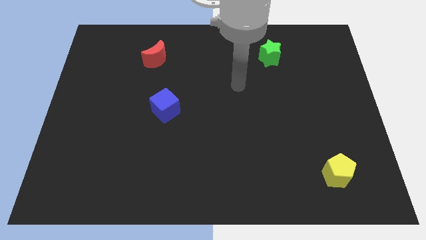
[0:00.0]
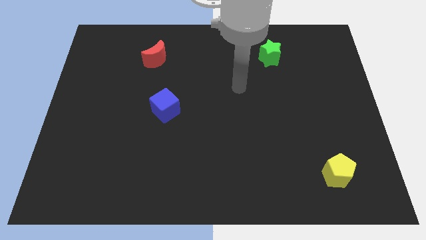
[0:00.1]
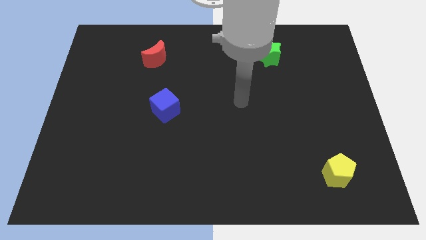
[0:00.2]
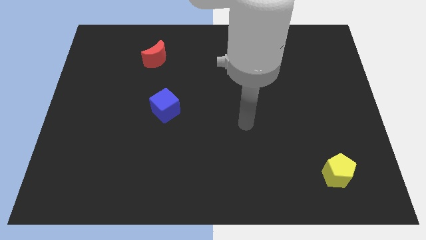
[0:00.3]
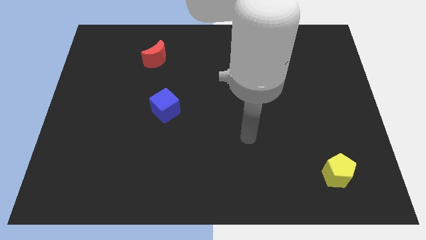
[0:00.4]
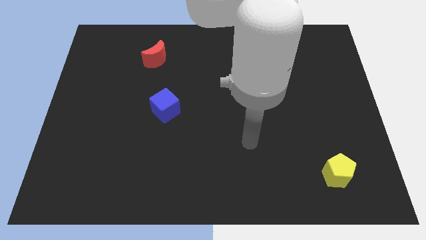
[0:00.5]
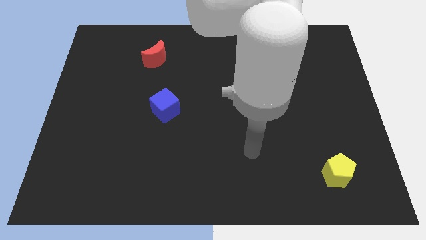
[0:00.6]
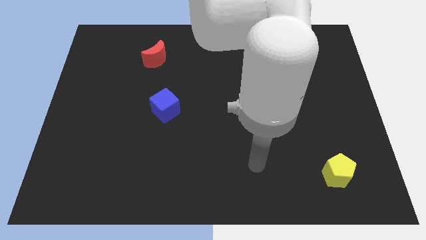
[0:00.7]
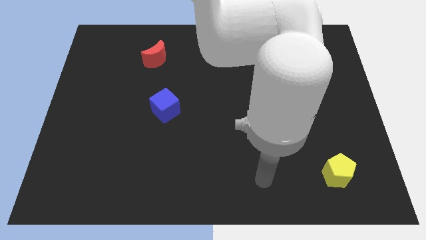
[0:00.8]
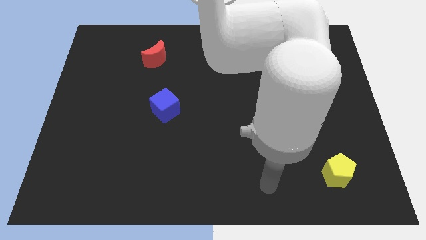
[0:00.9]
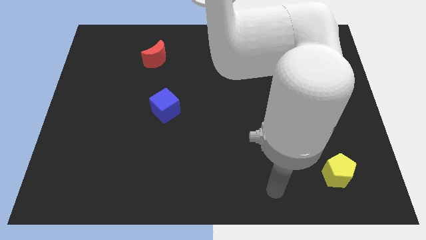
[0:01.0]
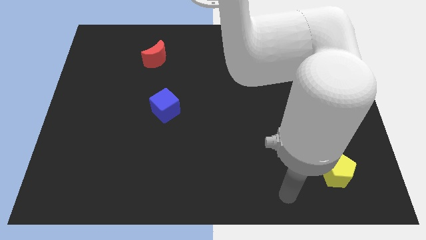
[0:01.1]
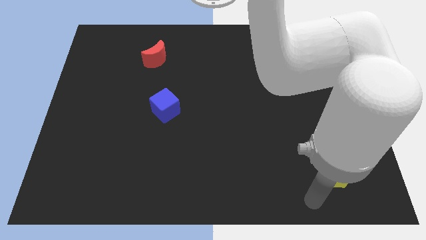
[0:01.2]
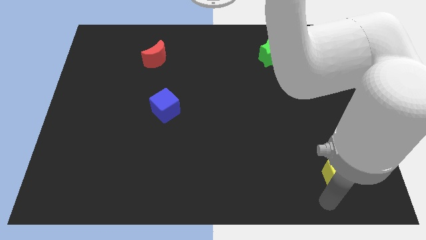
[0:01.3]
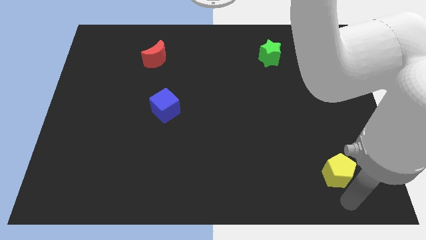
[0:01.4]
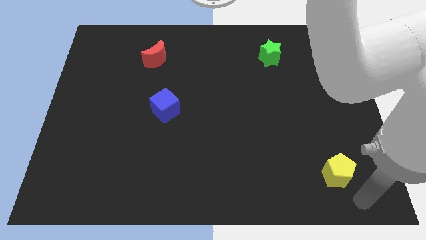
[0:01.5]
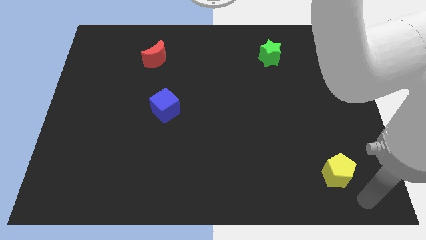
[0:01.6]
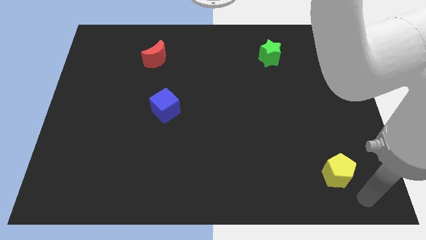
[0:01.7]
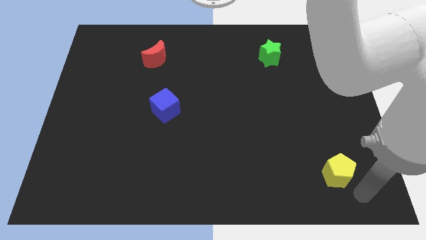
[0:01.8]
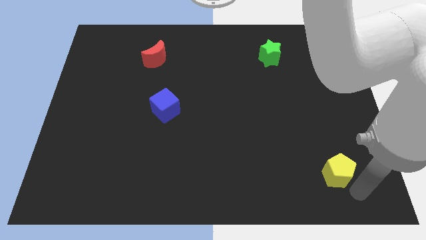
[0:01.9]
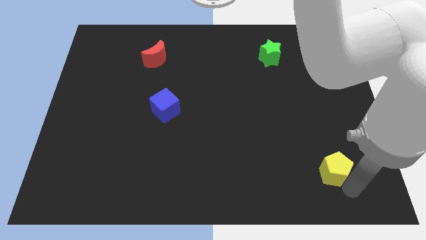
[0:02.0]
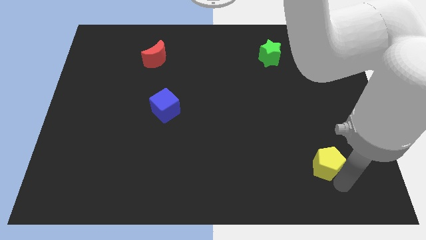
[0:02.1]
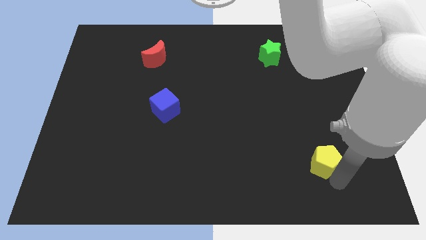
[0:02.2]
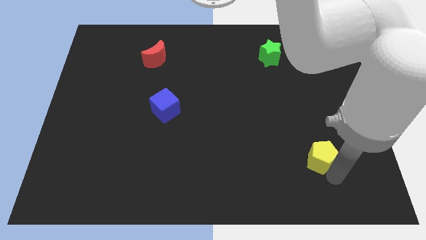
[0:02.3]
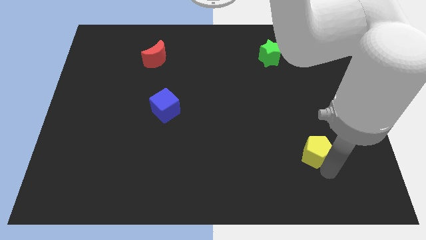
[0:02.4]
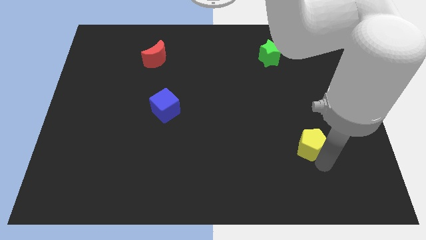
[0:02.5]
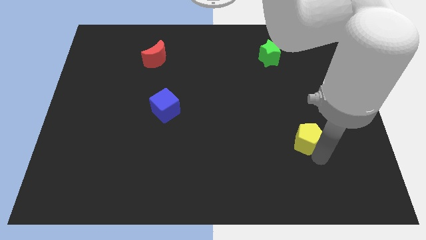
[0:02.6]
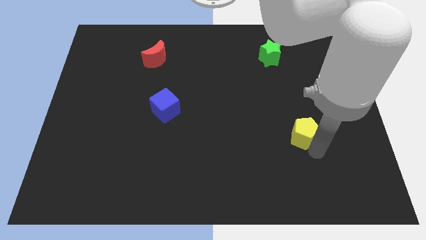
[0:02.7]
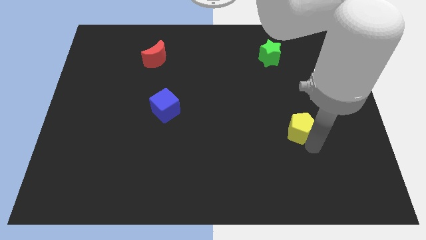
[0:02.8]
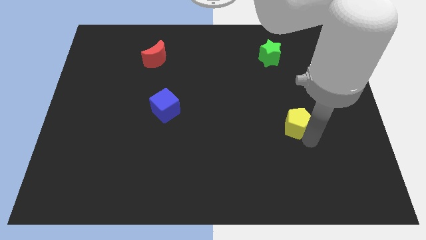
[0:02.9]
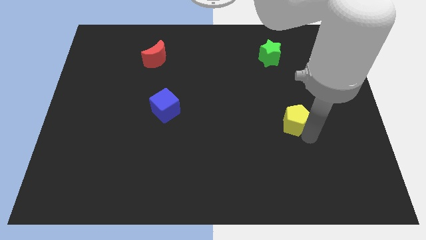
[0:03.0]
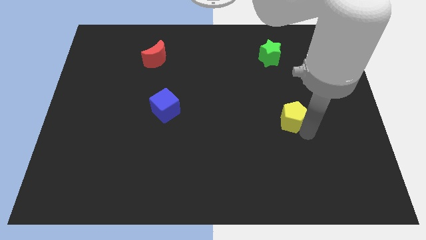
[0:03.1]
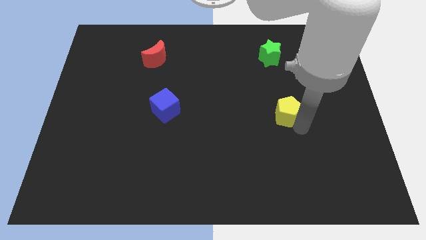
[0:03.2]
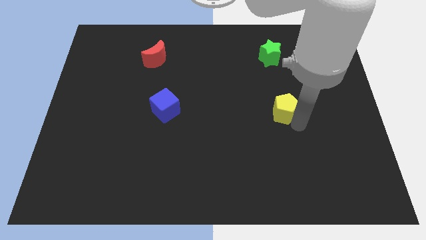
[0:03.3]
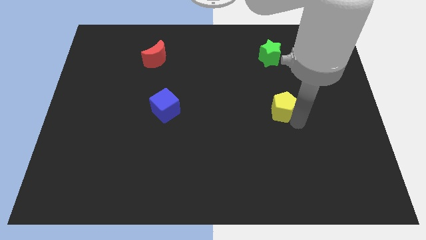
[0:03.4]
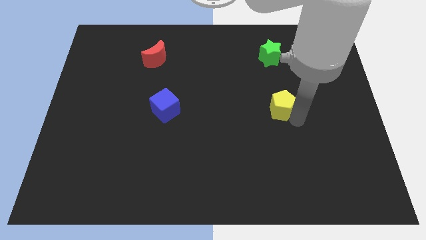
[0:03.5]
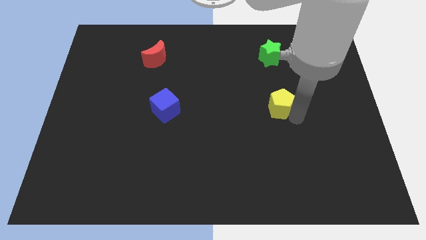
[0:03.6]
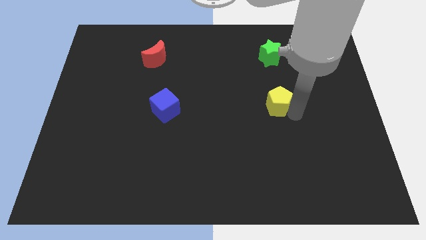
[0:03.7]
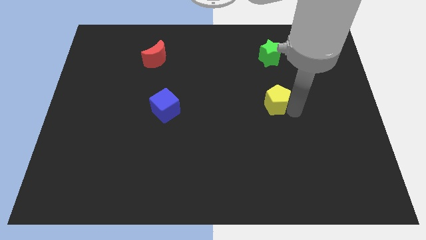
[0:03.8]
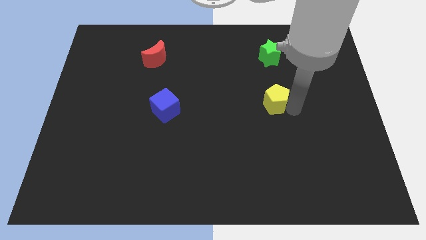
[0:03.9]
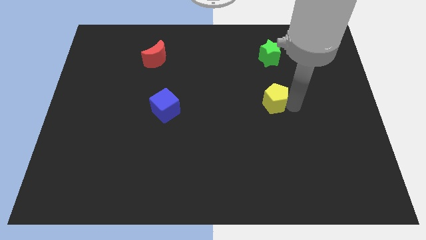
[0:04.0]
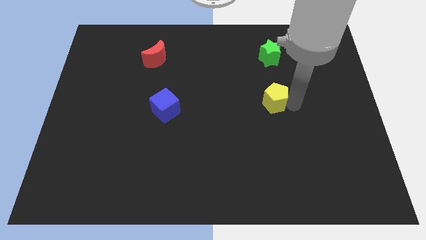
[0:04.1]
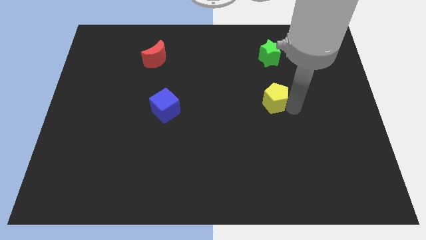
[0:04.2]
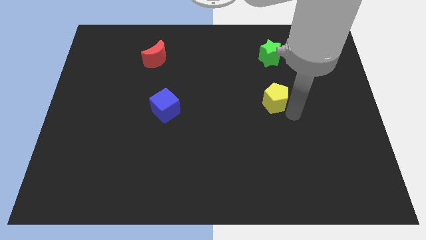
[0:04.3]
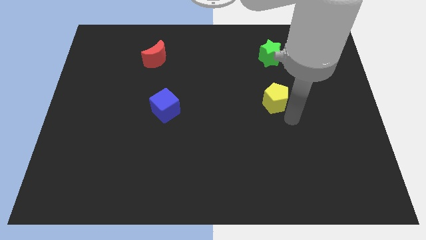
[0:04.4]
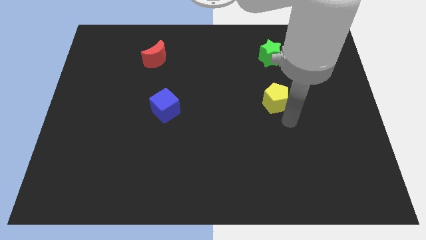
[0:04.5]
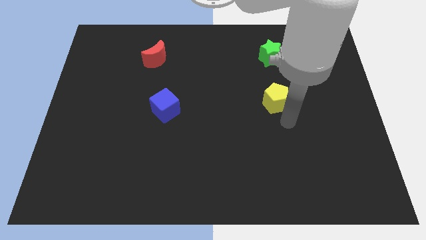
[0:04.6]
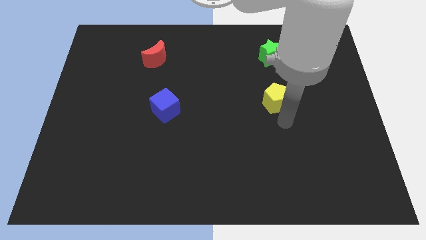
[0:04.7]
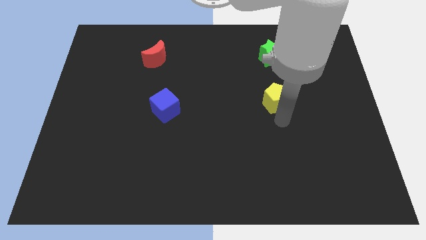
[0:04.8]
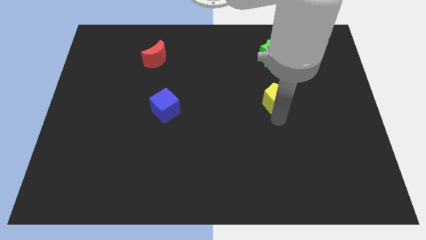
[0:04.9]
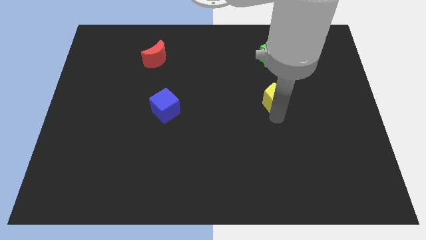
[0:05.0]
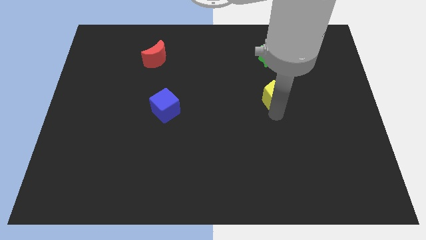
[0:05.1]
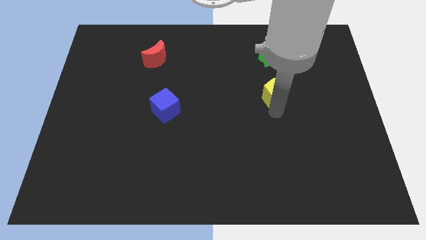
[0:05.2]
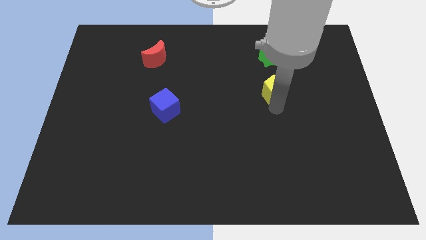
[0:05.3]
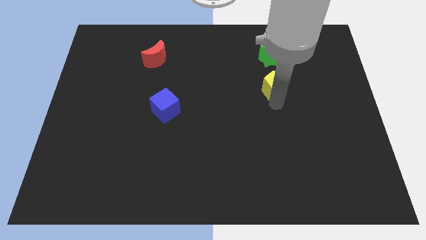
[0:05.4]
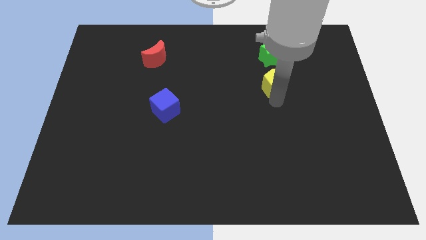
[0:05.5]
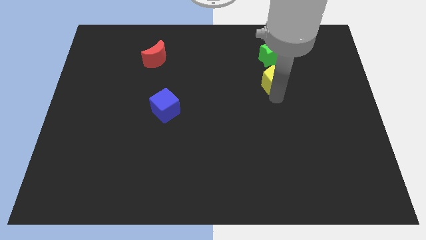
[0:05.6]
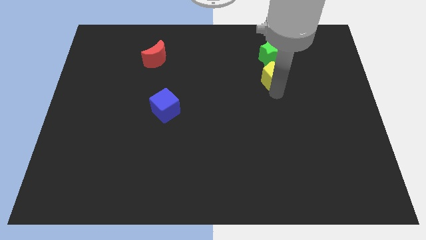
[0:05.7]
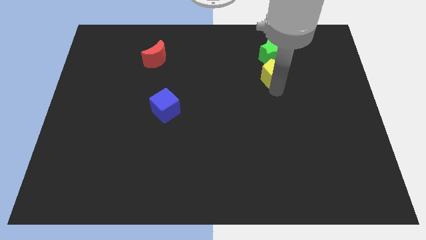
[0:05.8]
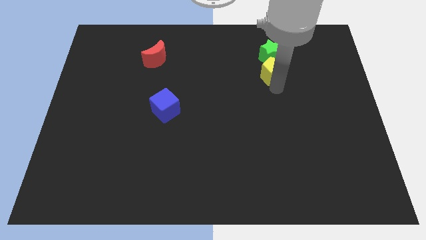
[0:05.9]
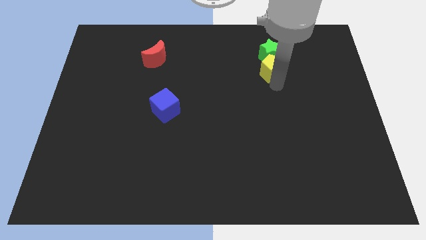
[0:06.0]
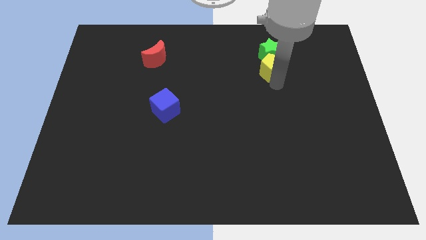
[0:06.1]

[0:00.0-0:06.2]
push the pentagon next to the green star

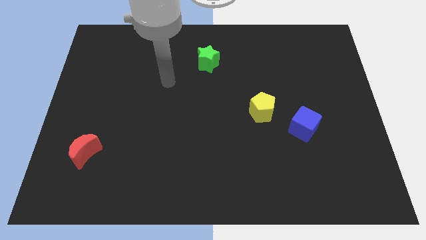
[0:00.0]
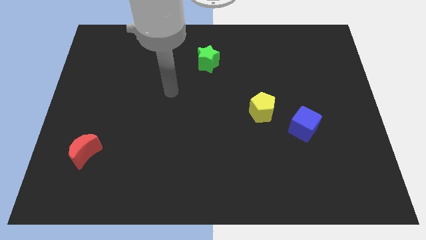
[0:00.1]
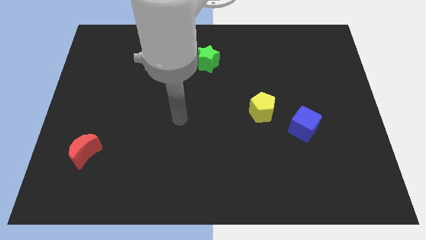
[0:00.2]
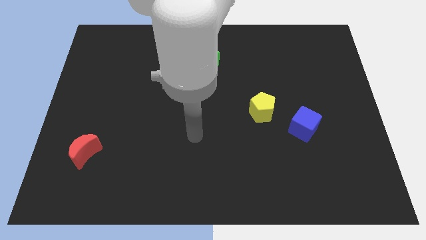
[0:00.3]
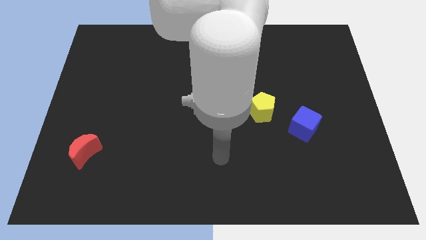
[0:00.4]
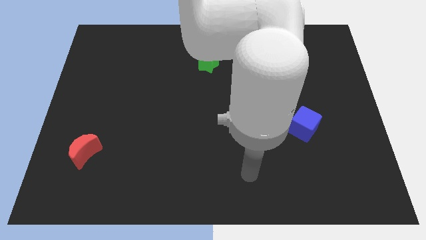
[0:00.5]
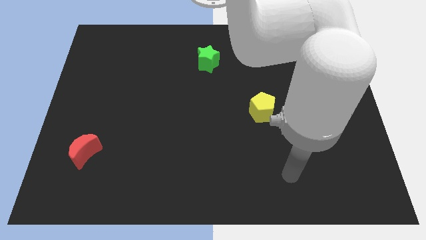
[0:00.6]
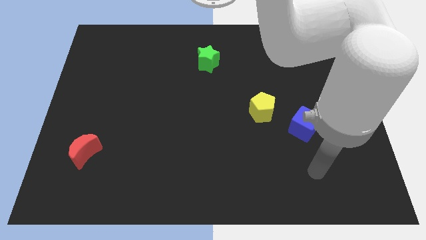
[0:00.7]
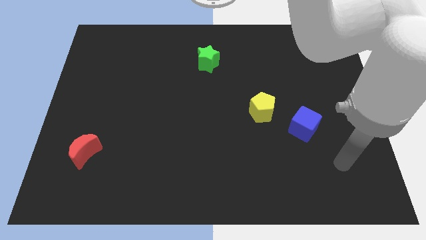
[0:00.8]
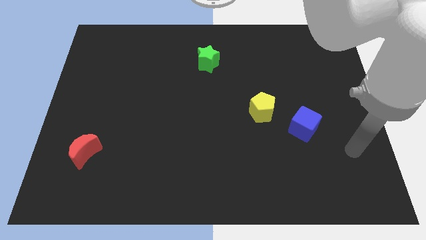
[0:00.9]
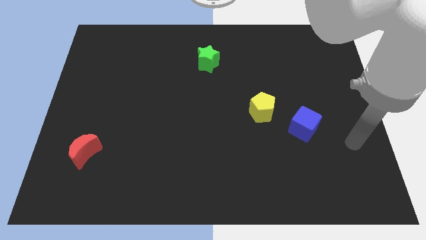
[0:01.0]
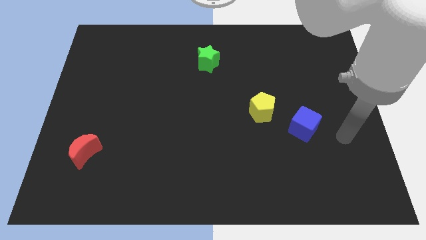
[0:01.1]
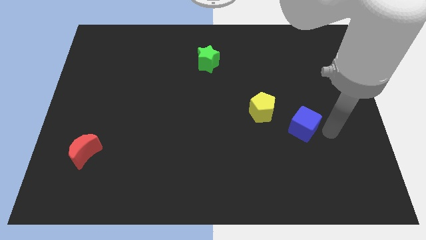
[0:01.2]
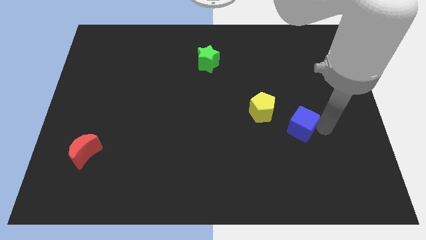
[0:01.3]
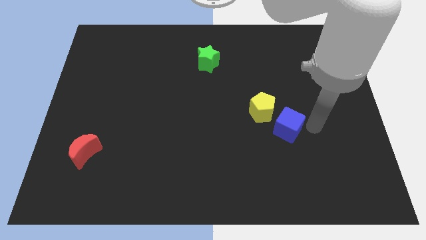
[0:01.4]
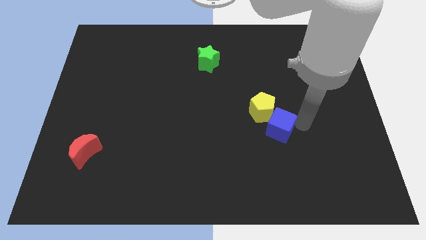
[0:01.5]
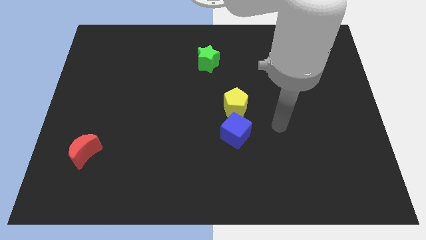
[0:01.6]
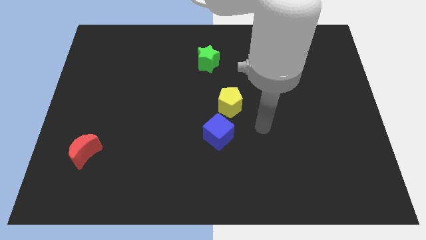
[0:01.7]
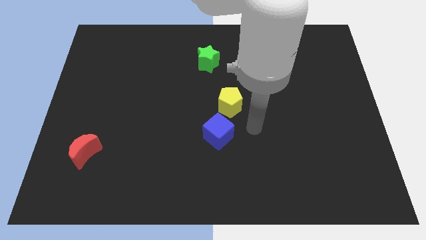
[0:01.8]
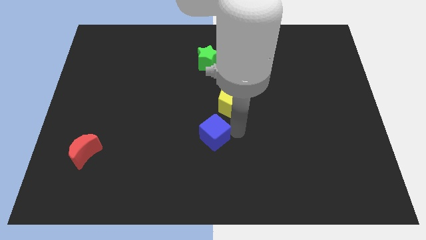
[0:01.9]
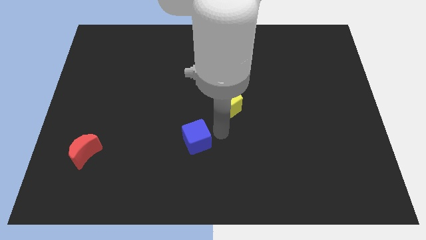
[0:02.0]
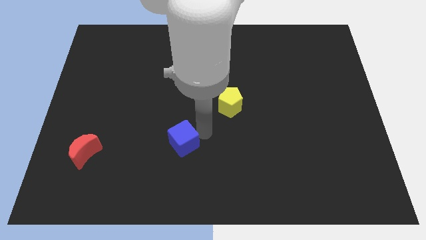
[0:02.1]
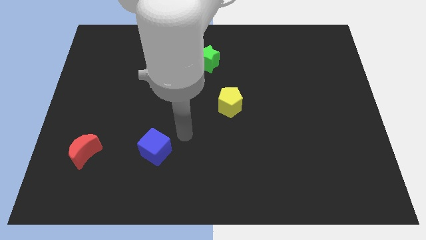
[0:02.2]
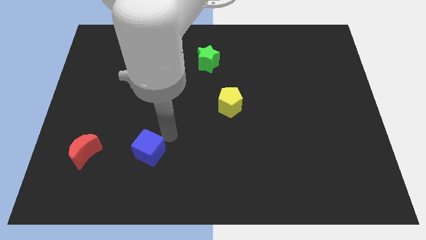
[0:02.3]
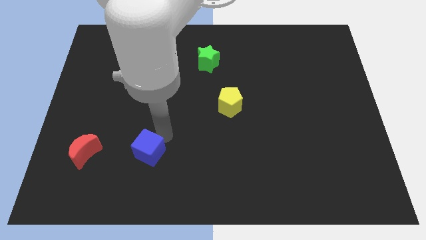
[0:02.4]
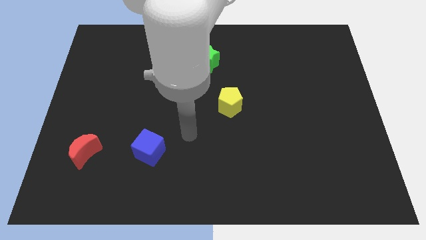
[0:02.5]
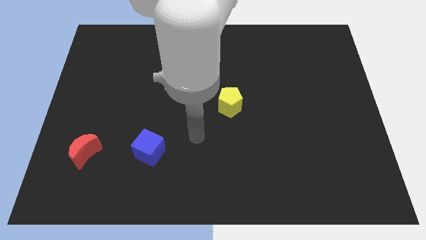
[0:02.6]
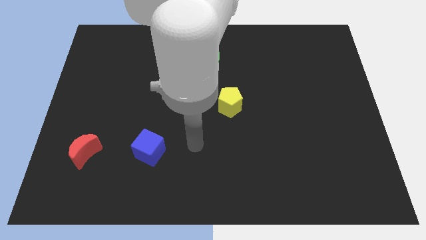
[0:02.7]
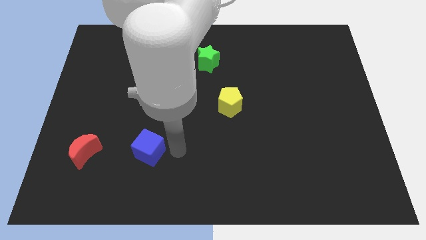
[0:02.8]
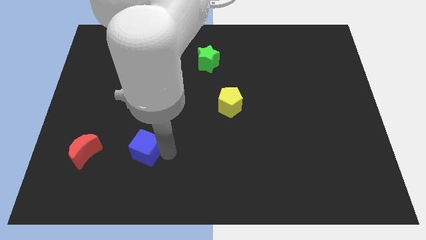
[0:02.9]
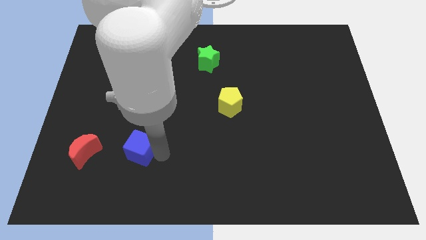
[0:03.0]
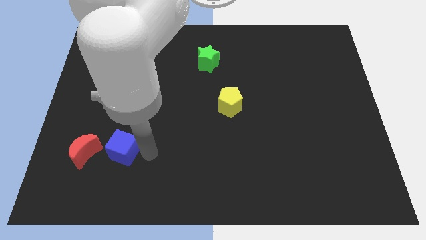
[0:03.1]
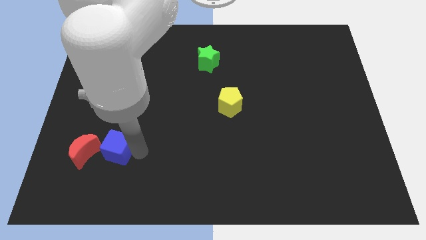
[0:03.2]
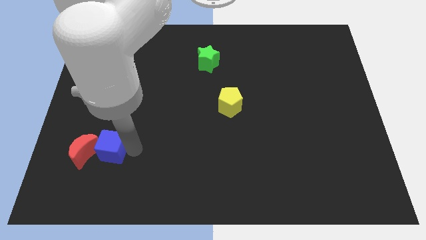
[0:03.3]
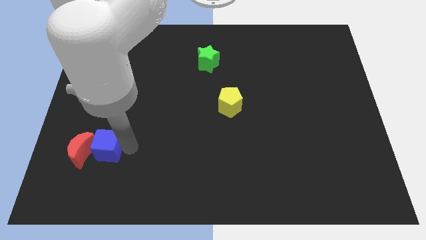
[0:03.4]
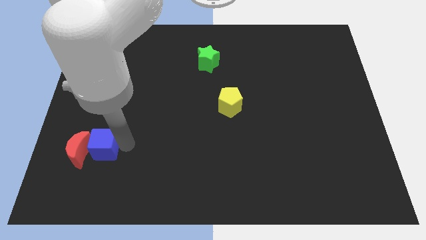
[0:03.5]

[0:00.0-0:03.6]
push the cube close to the red block
